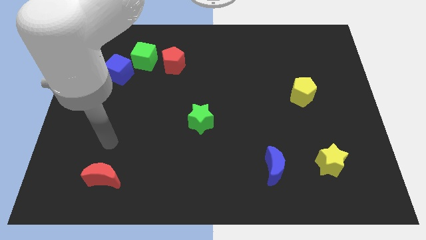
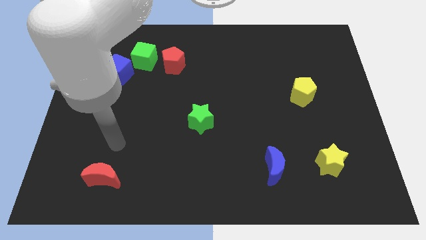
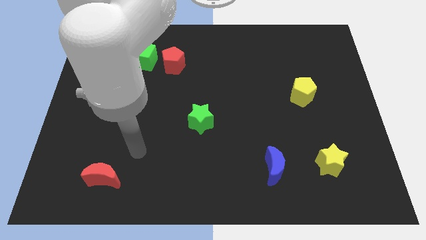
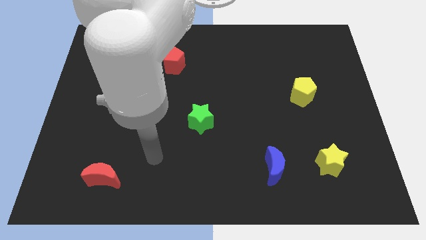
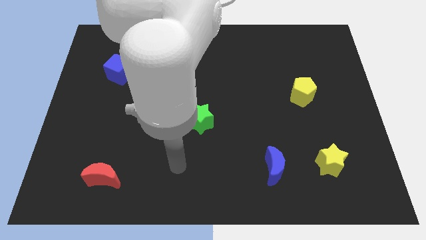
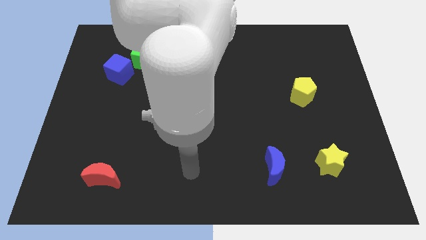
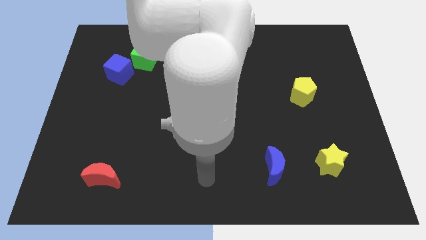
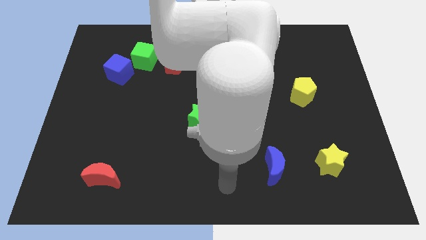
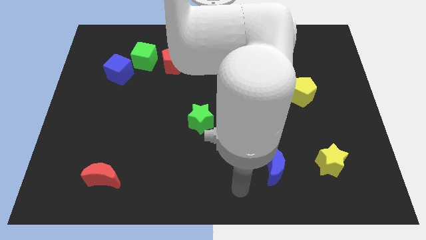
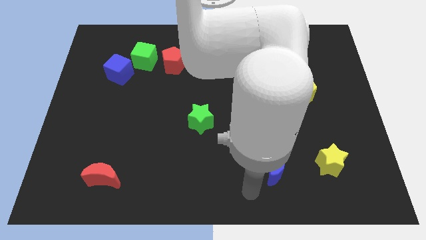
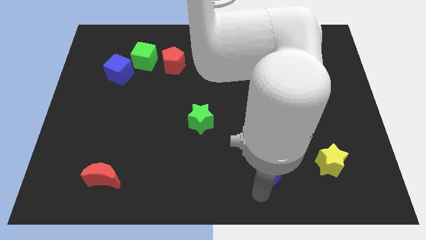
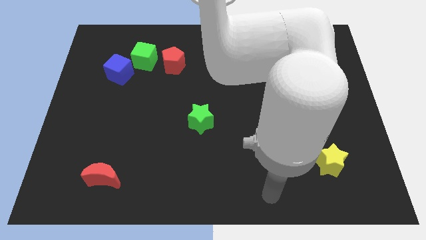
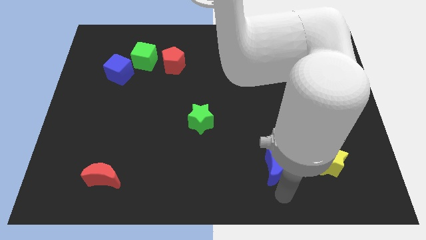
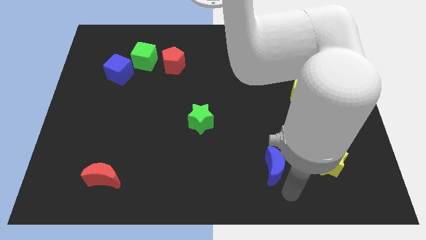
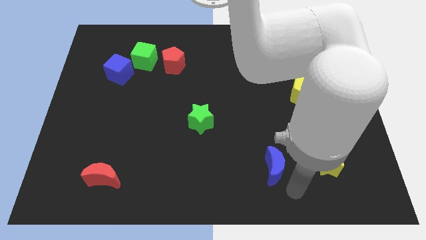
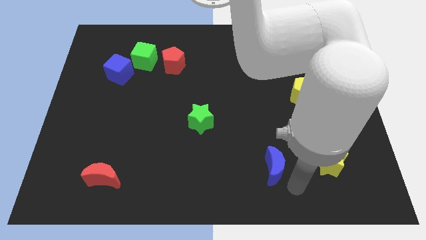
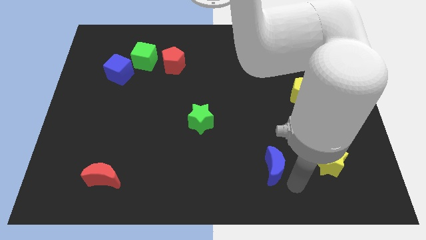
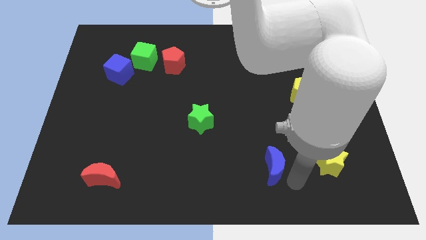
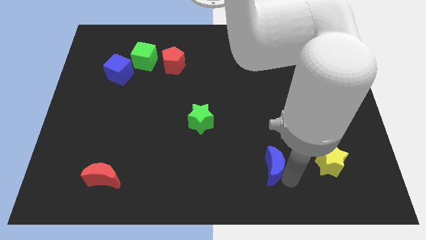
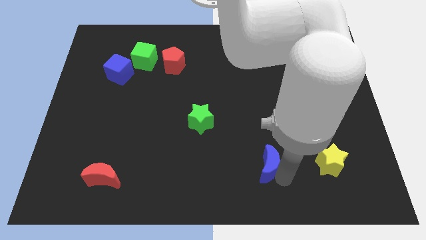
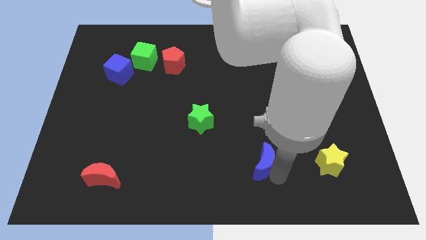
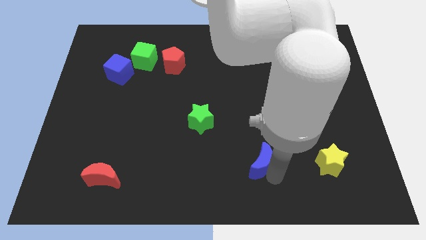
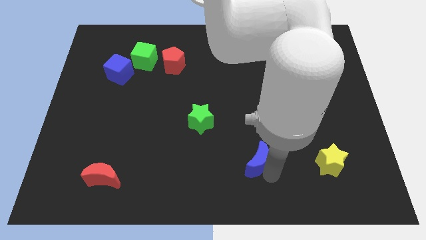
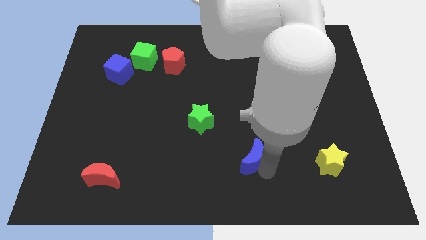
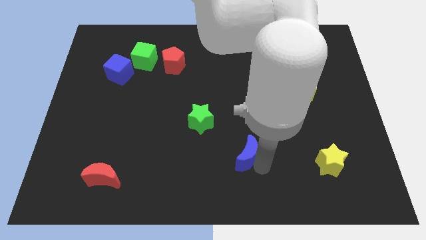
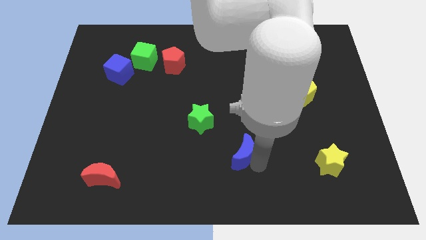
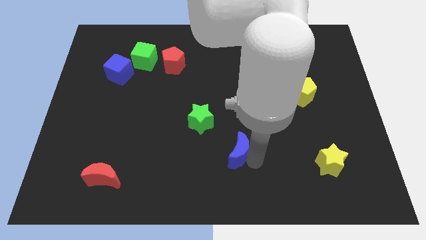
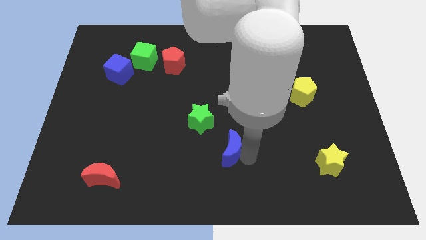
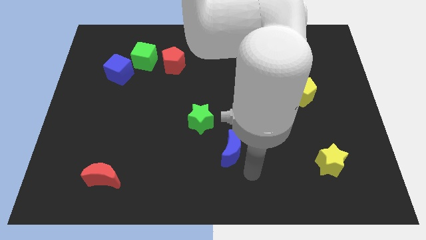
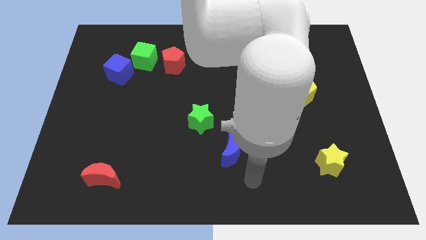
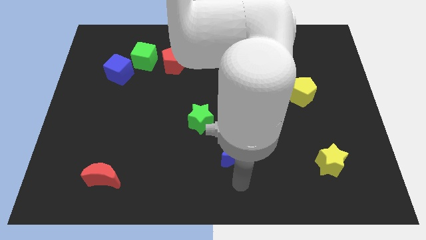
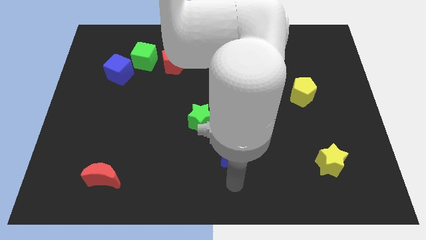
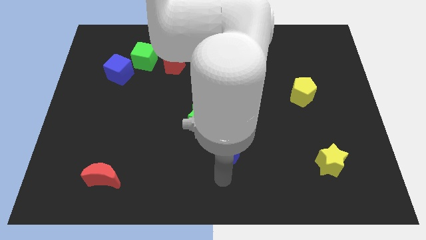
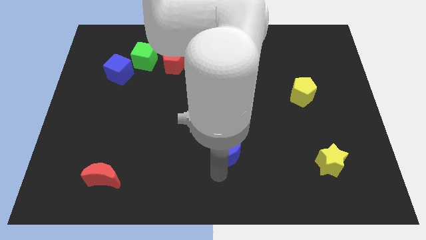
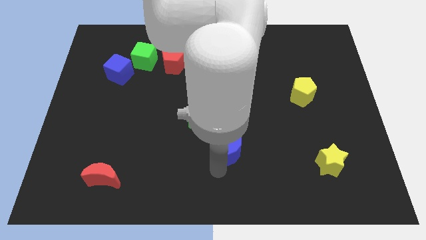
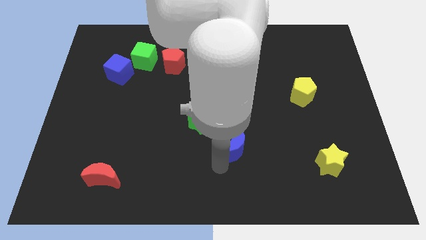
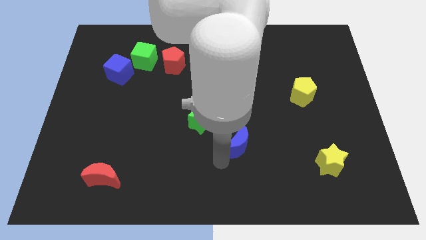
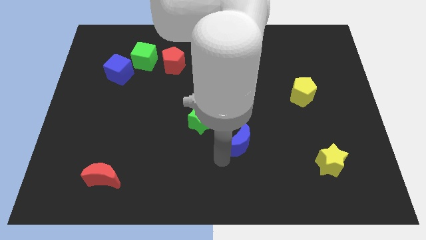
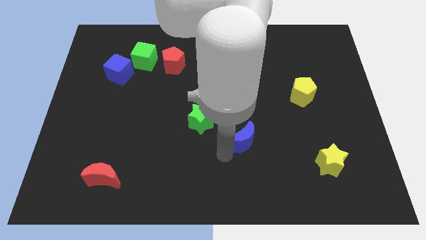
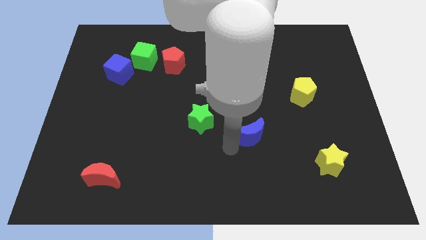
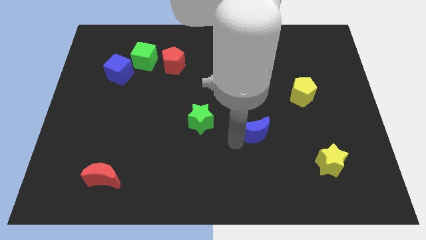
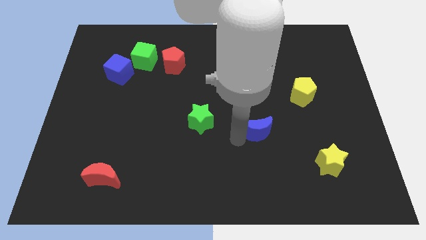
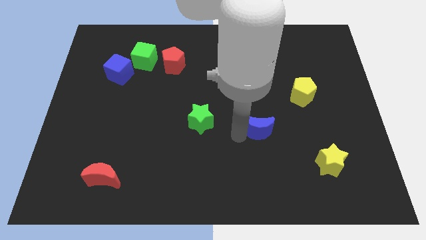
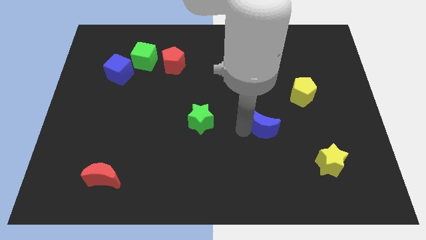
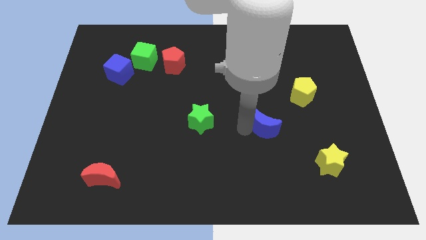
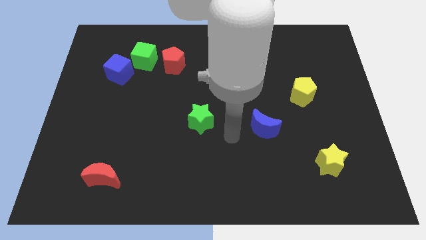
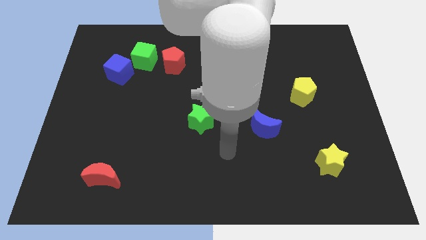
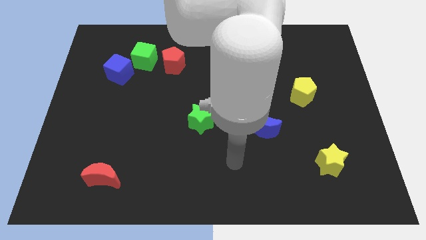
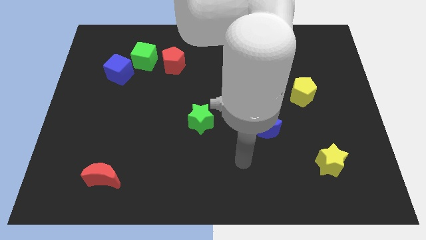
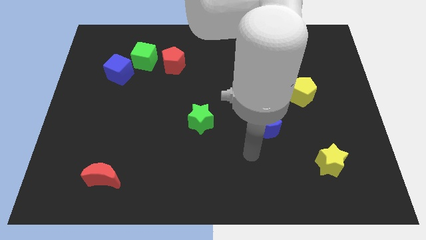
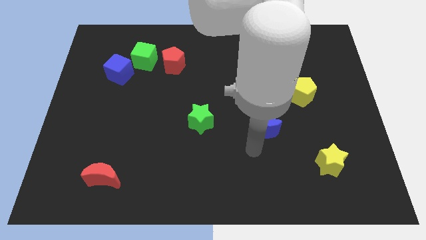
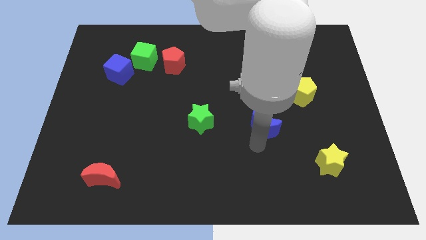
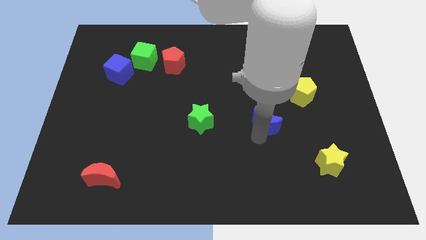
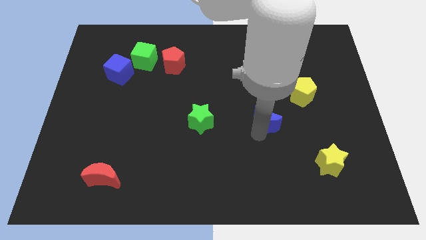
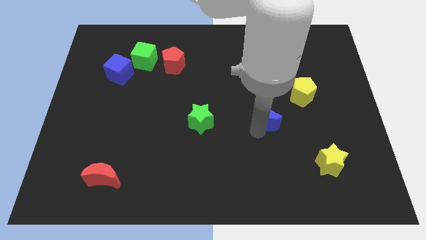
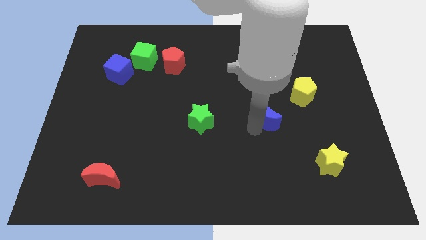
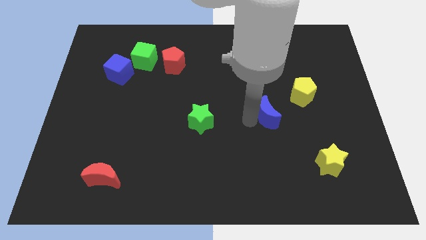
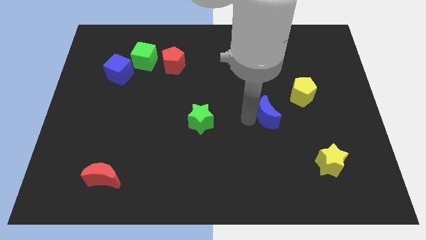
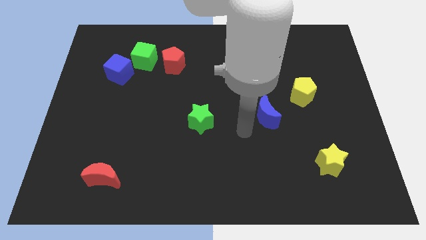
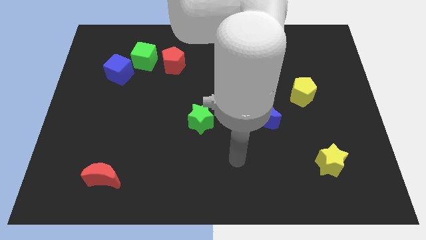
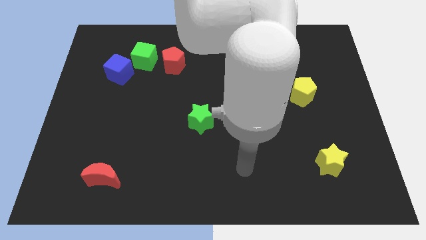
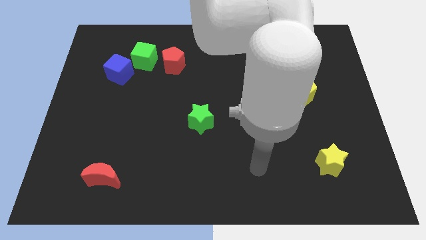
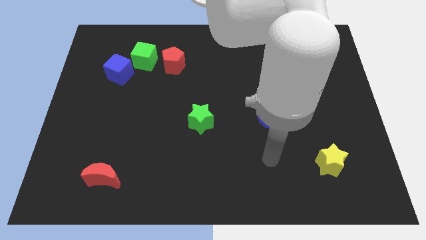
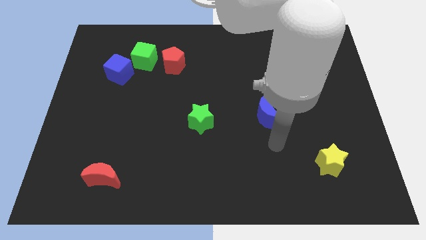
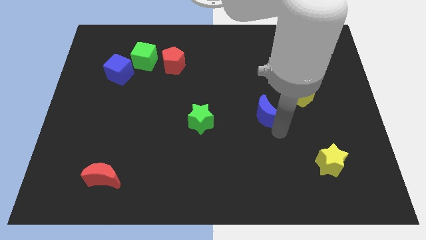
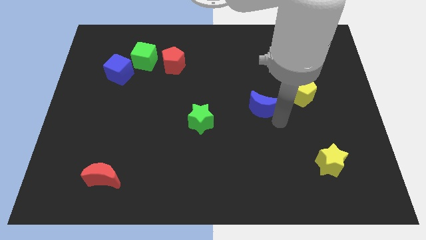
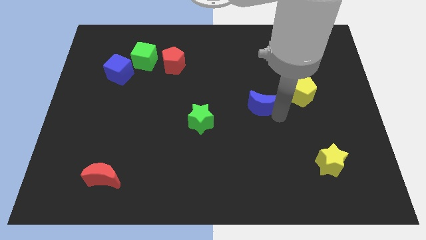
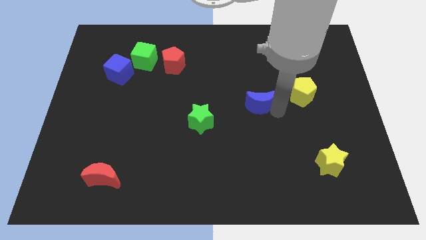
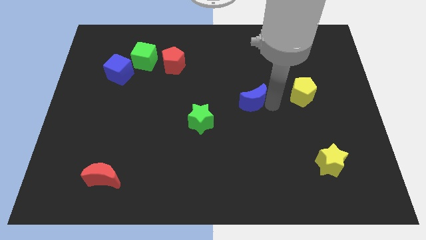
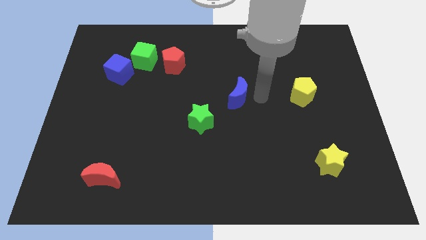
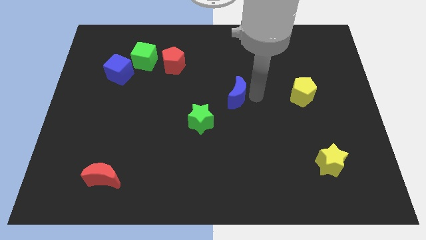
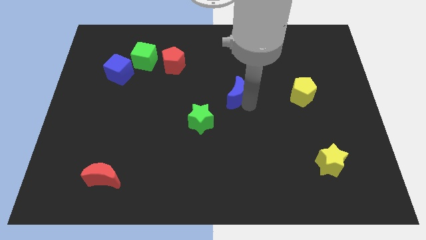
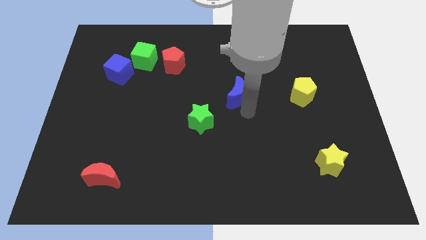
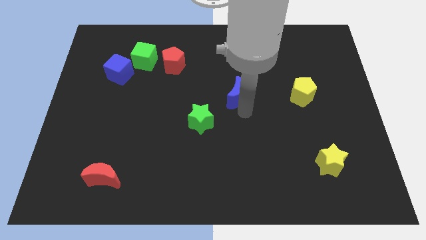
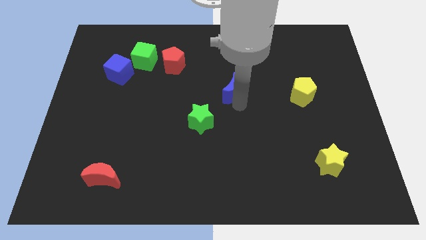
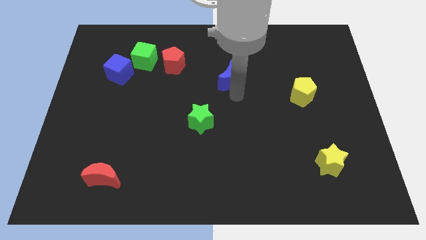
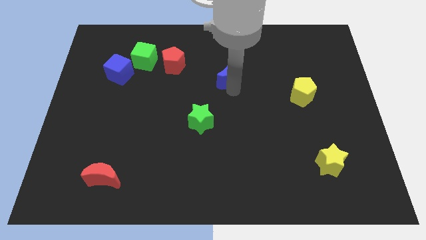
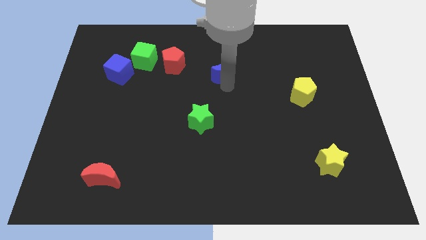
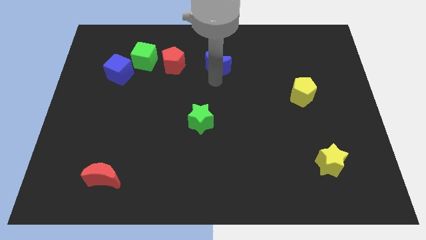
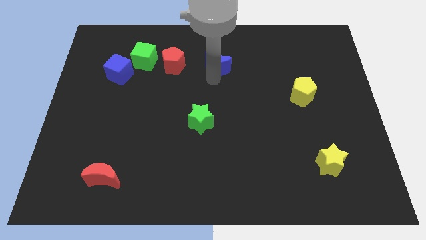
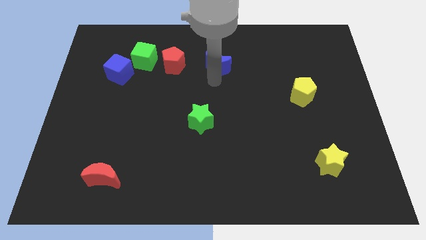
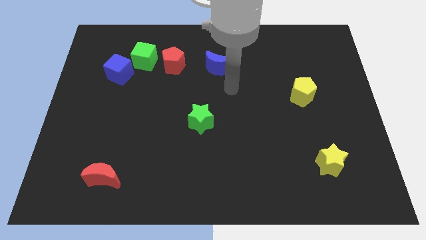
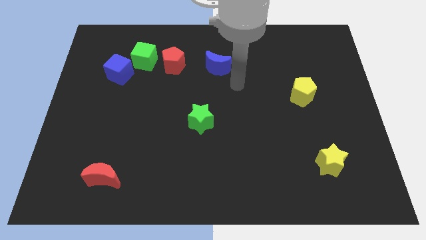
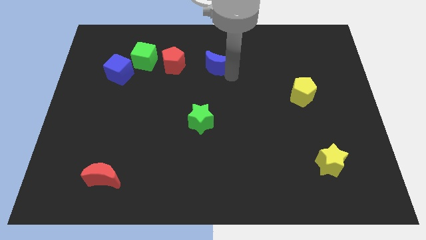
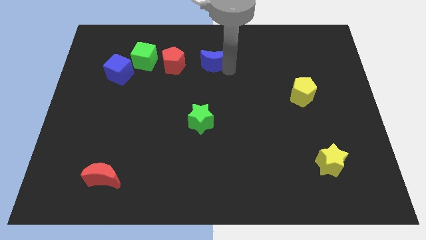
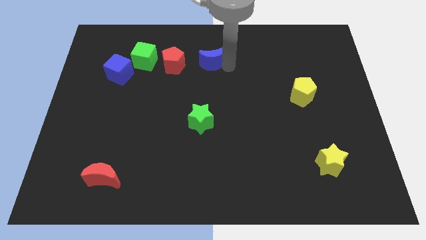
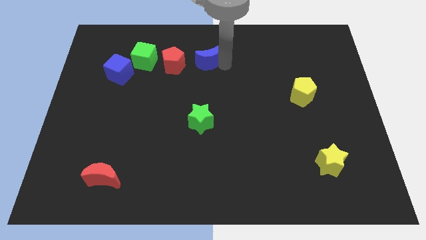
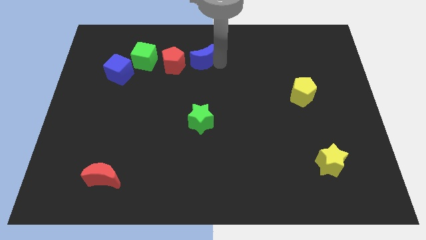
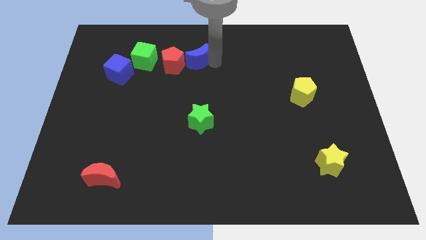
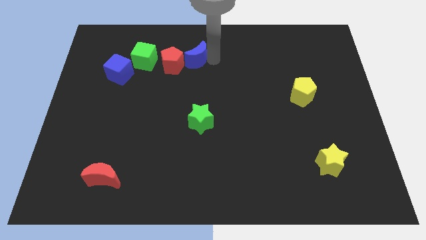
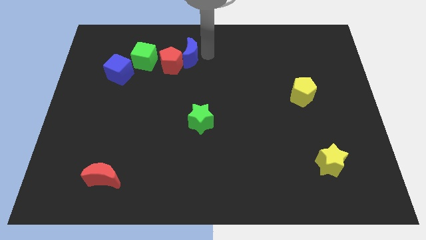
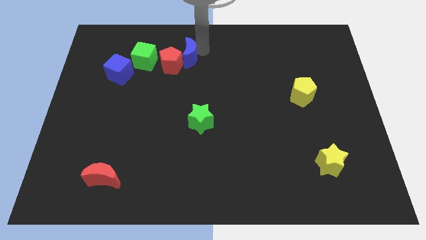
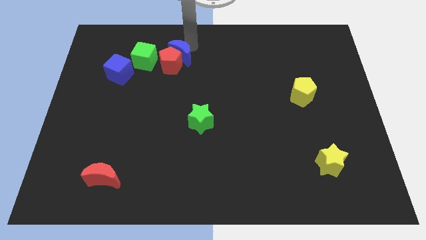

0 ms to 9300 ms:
slide the blue moon to the red pentagon
